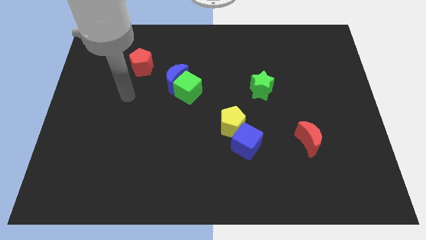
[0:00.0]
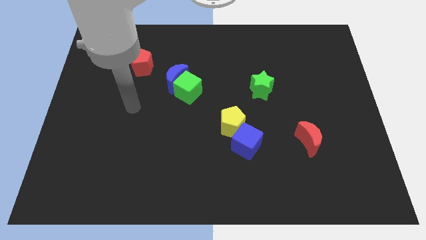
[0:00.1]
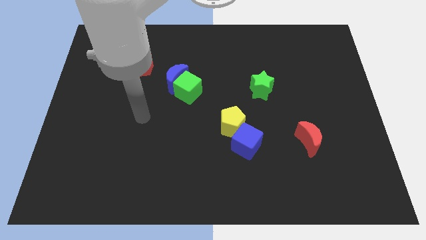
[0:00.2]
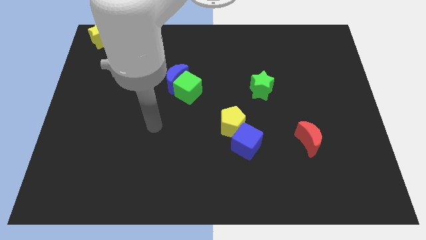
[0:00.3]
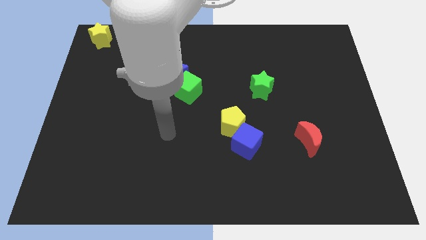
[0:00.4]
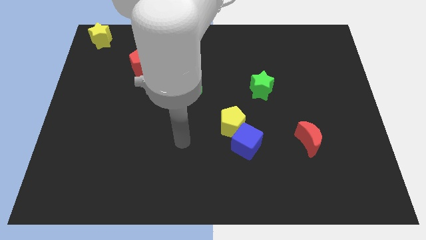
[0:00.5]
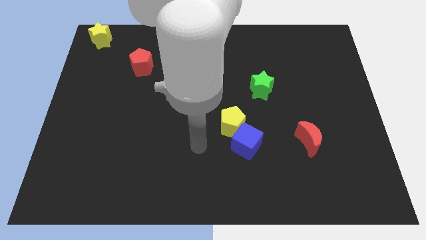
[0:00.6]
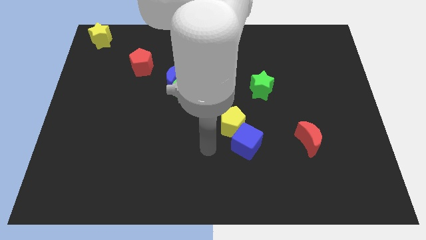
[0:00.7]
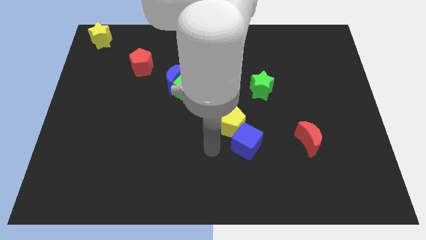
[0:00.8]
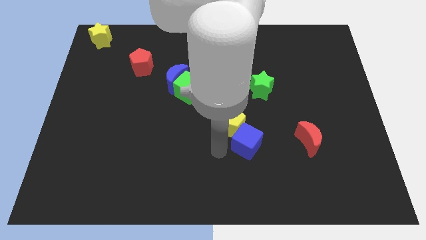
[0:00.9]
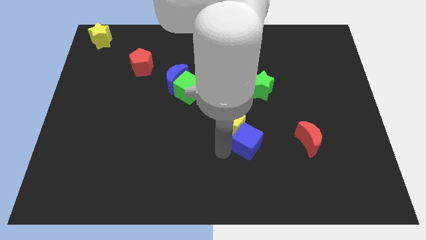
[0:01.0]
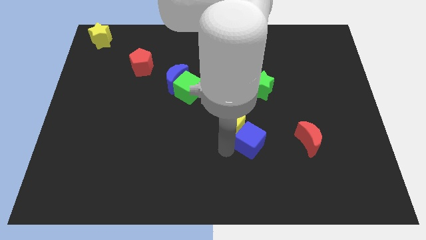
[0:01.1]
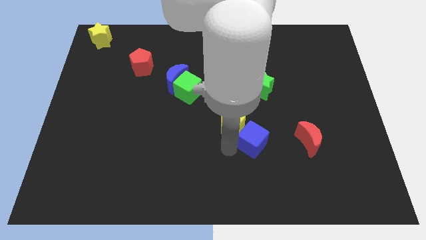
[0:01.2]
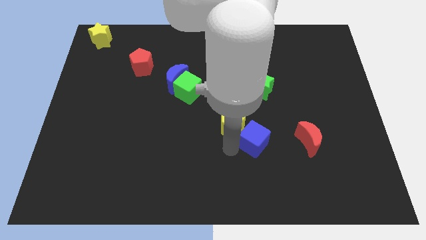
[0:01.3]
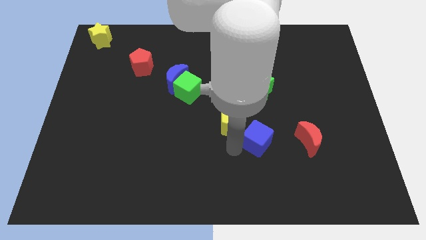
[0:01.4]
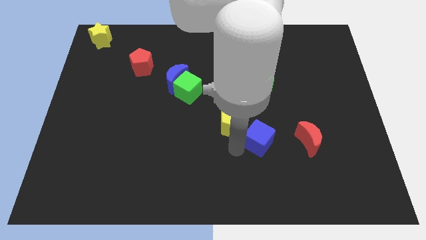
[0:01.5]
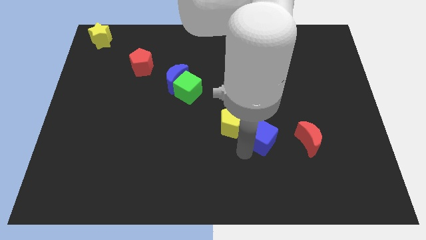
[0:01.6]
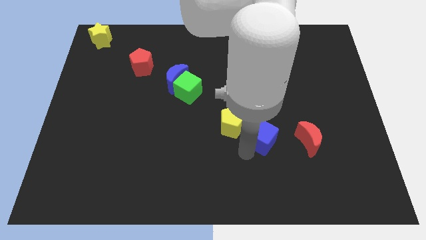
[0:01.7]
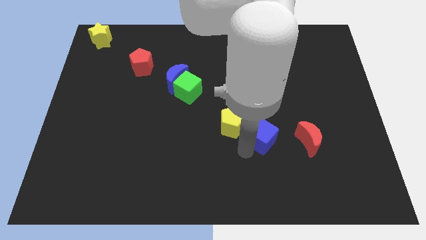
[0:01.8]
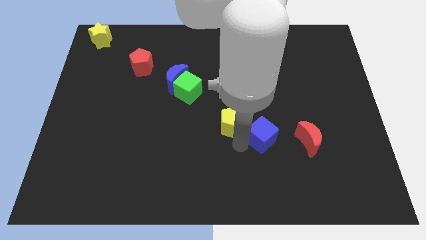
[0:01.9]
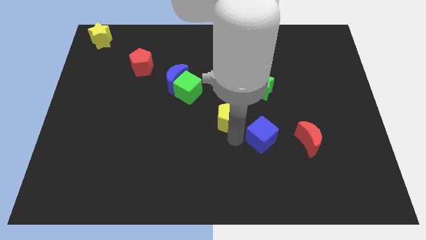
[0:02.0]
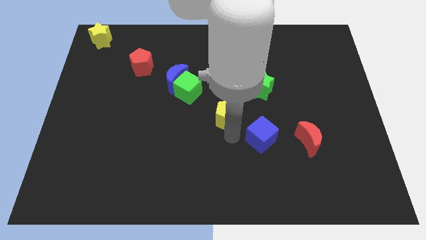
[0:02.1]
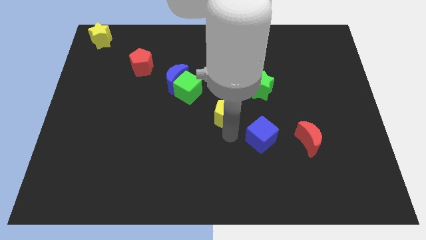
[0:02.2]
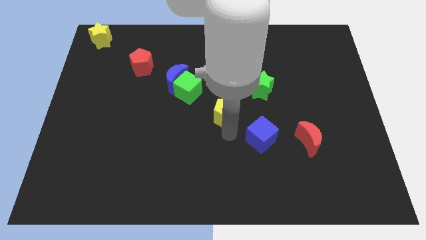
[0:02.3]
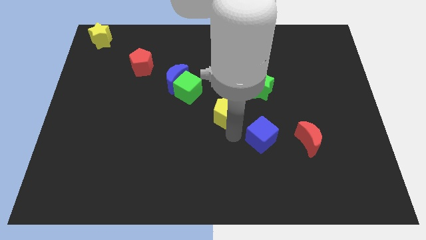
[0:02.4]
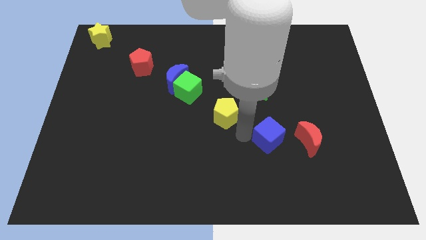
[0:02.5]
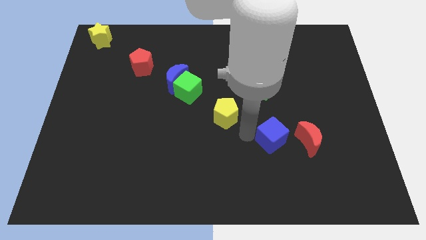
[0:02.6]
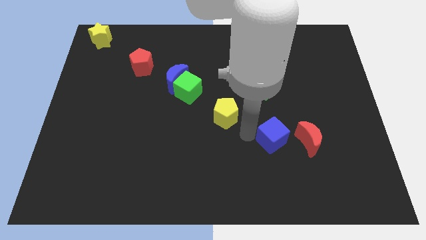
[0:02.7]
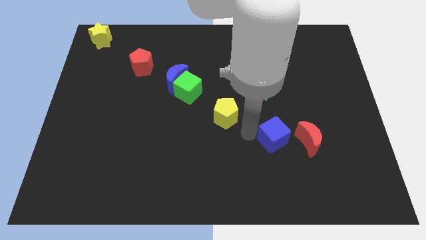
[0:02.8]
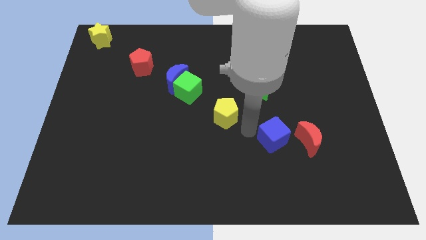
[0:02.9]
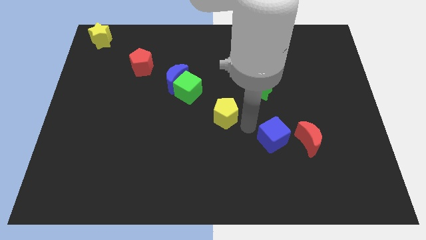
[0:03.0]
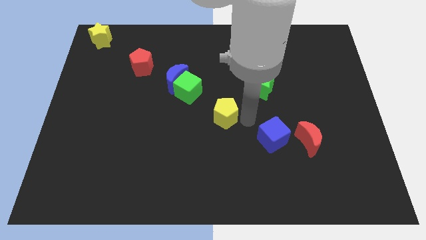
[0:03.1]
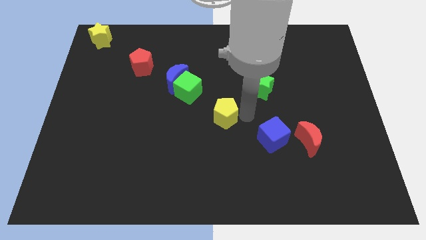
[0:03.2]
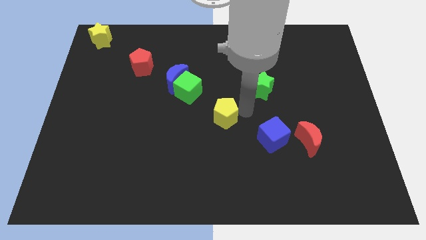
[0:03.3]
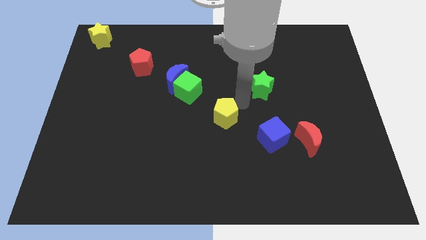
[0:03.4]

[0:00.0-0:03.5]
move the blue cube and the yellow pentagon away from each other

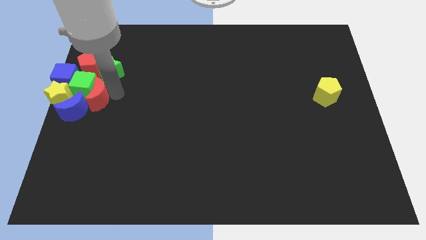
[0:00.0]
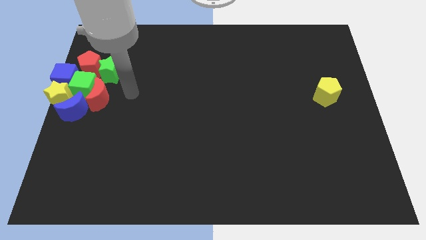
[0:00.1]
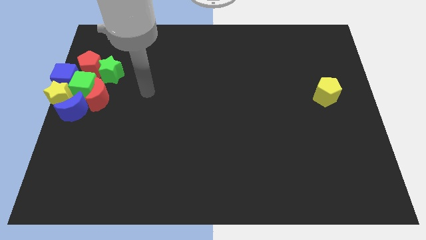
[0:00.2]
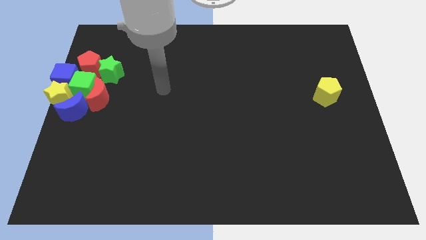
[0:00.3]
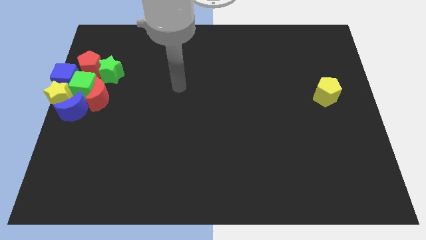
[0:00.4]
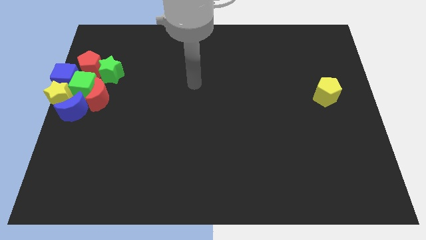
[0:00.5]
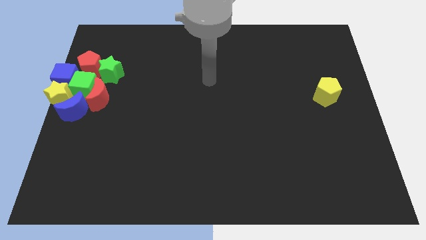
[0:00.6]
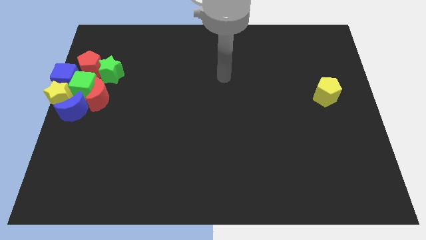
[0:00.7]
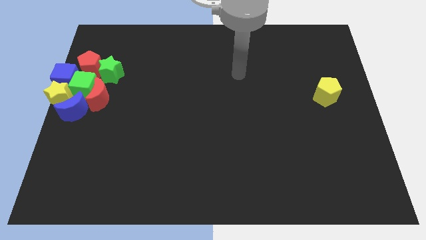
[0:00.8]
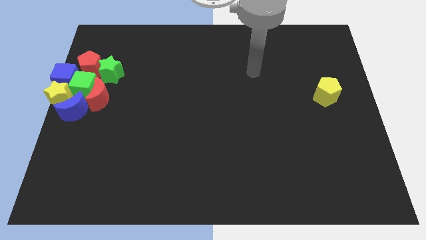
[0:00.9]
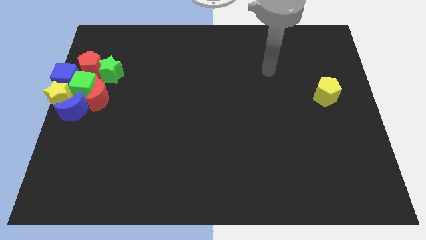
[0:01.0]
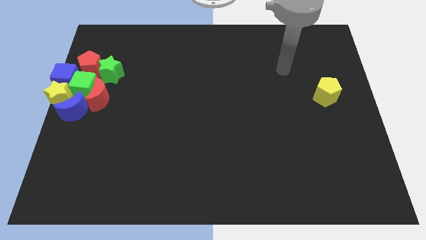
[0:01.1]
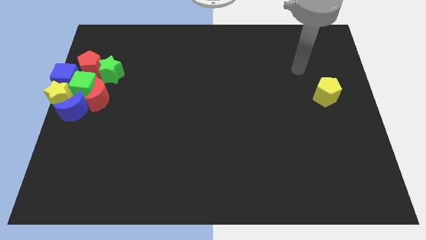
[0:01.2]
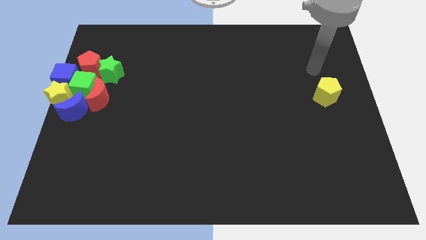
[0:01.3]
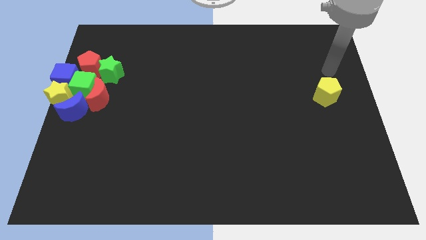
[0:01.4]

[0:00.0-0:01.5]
push your arm above the yellow pentagon

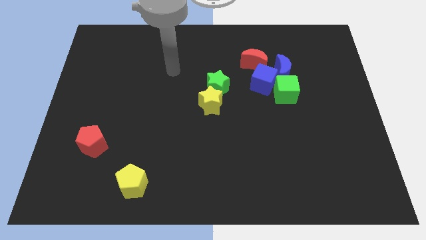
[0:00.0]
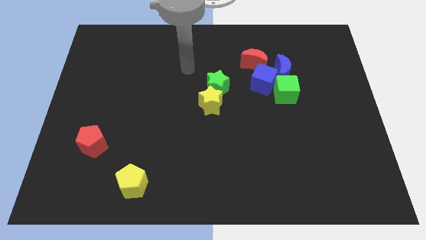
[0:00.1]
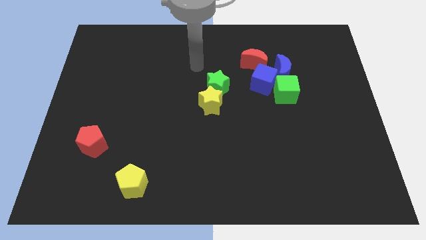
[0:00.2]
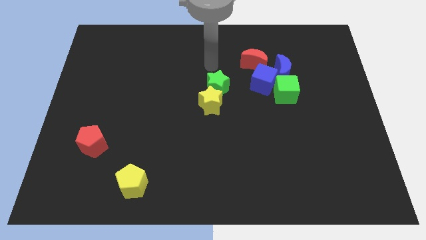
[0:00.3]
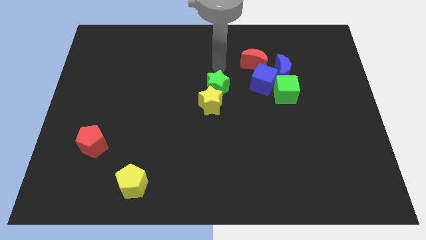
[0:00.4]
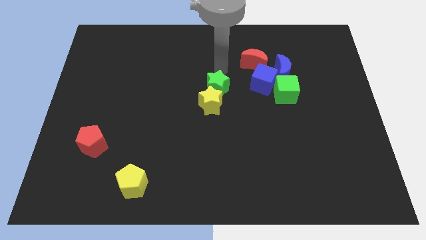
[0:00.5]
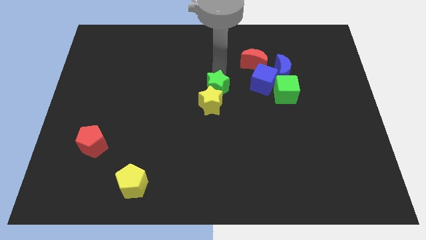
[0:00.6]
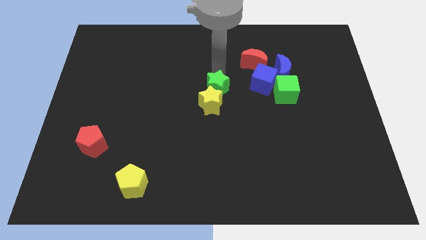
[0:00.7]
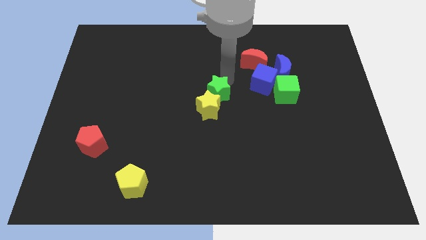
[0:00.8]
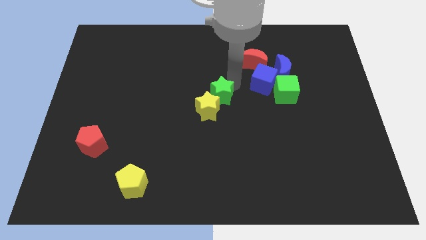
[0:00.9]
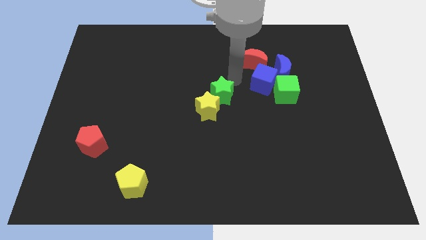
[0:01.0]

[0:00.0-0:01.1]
push the green star in to the yellow star

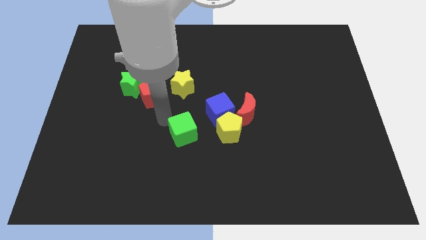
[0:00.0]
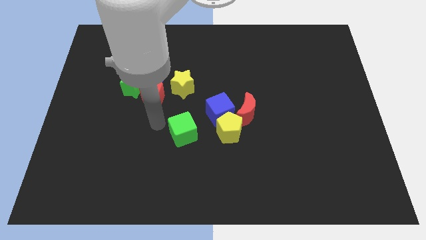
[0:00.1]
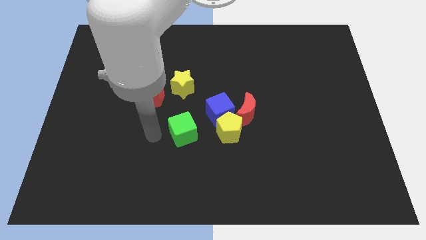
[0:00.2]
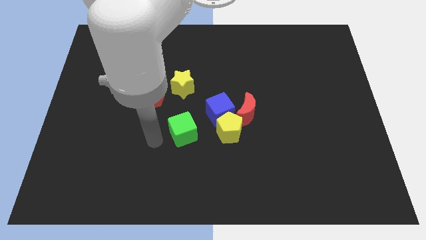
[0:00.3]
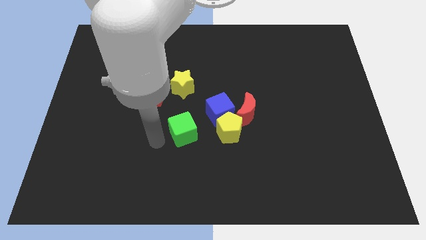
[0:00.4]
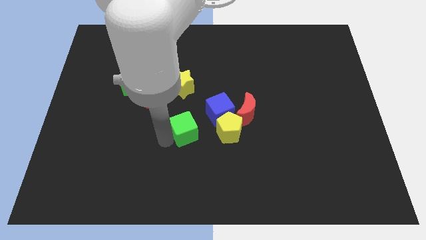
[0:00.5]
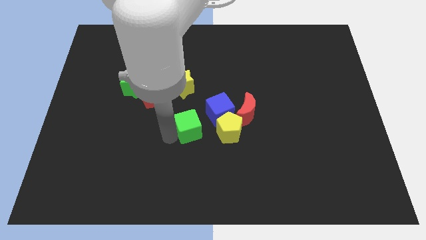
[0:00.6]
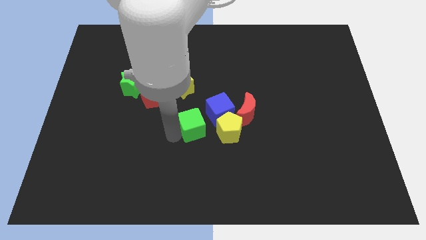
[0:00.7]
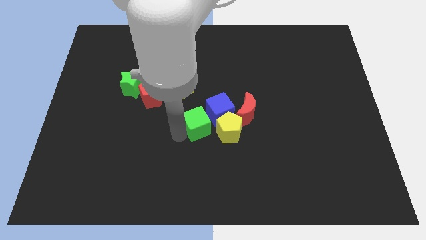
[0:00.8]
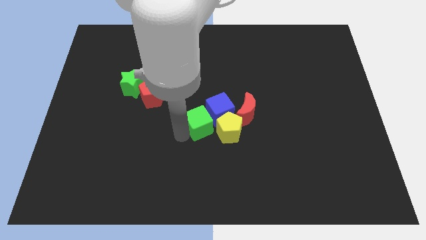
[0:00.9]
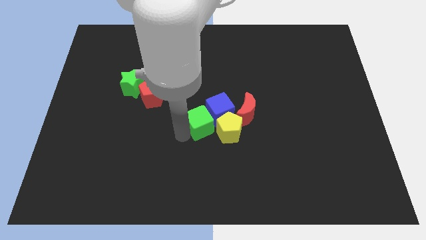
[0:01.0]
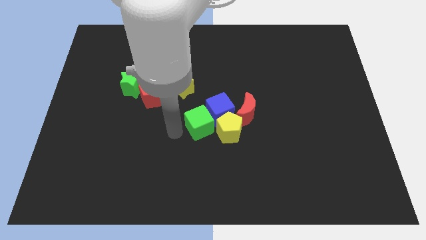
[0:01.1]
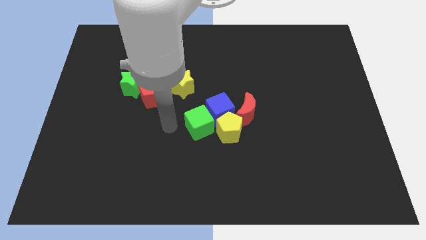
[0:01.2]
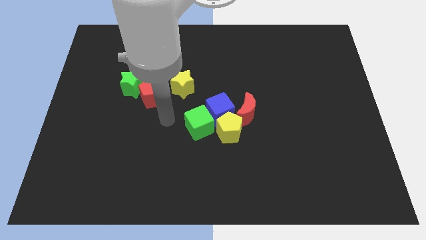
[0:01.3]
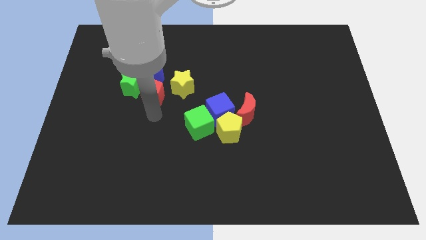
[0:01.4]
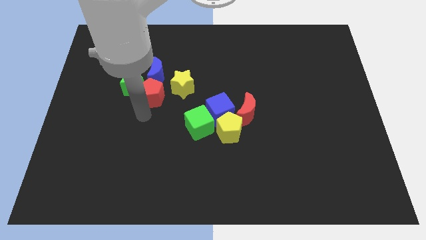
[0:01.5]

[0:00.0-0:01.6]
move the green cube to the left side of the blue cube

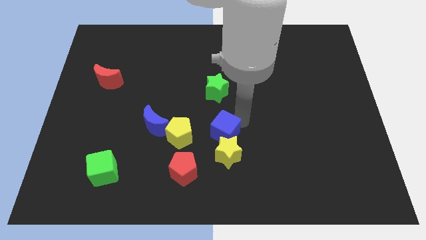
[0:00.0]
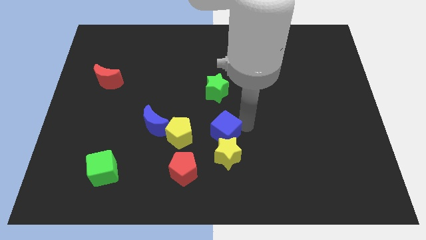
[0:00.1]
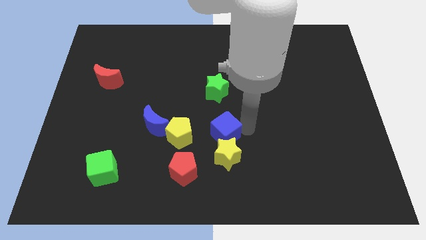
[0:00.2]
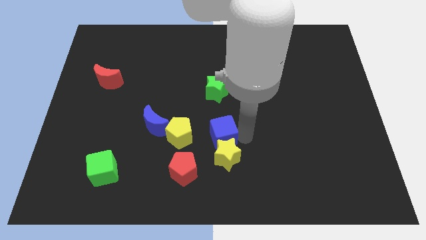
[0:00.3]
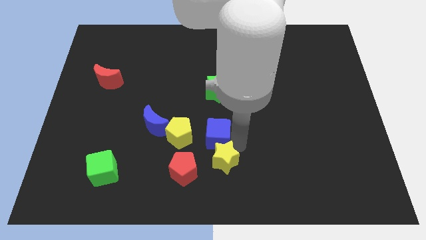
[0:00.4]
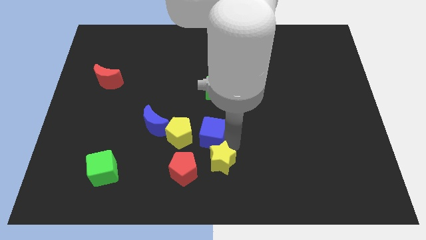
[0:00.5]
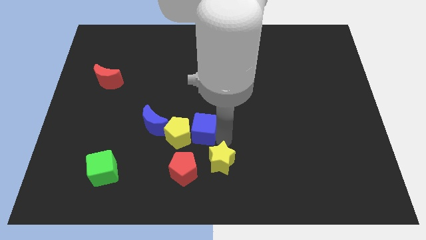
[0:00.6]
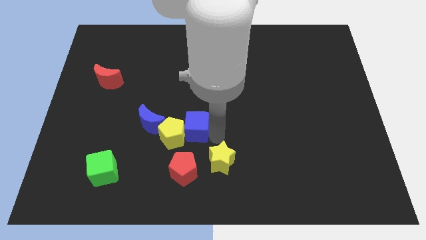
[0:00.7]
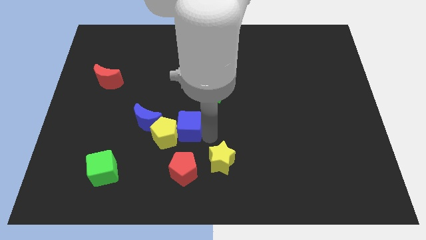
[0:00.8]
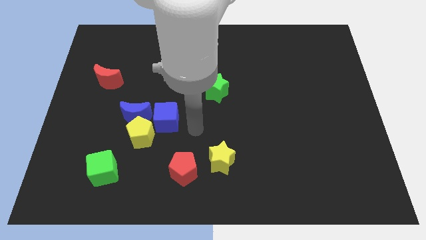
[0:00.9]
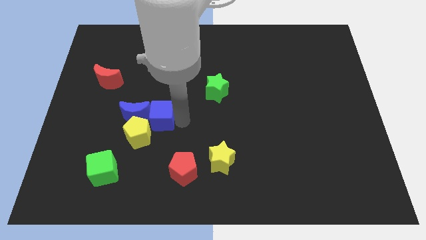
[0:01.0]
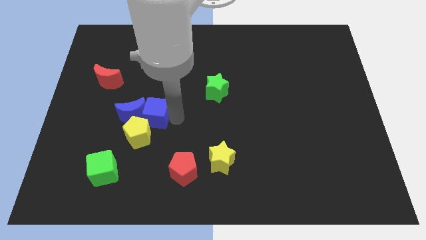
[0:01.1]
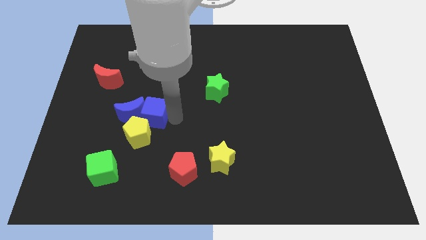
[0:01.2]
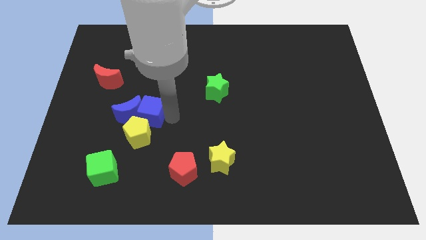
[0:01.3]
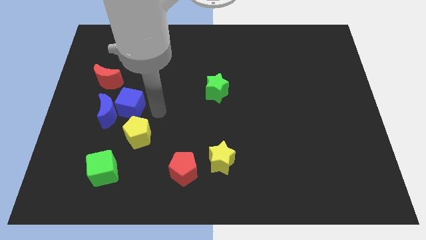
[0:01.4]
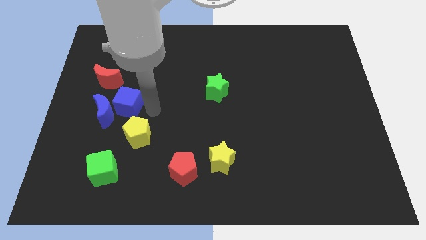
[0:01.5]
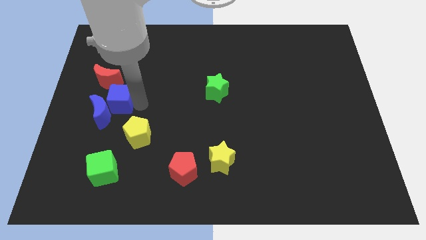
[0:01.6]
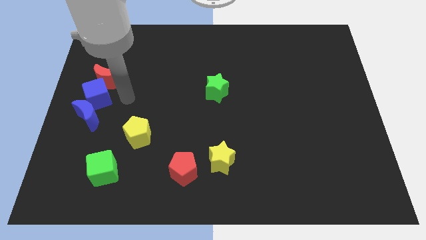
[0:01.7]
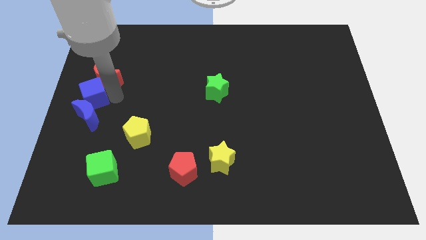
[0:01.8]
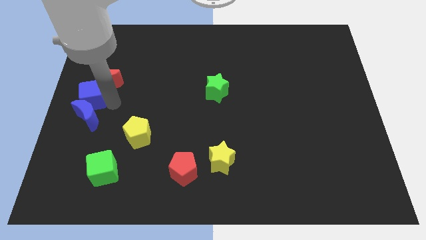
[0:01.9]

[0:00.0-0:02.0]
separate the blue cube from the yellow star
